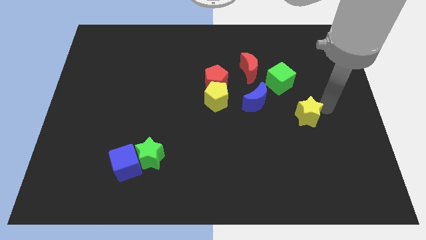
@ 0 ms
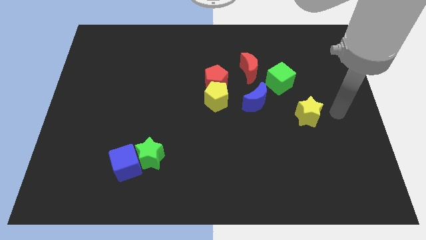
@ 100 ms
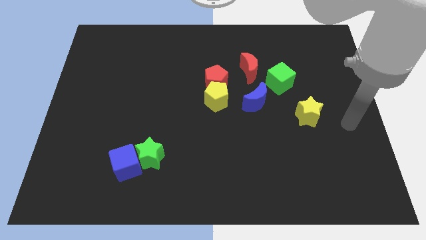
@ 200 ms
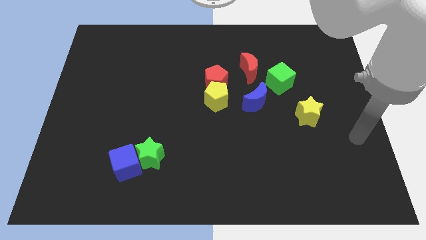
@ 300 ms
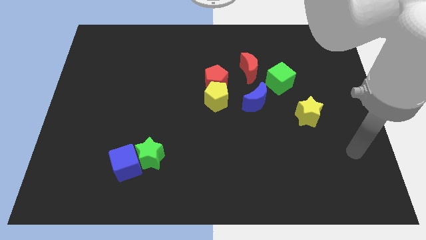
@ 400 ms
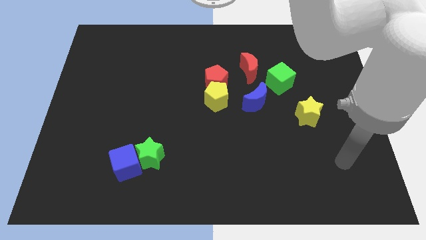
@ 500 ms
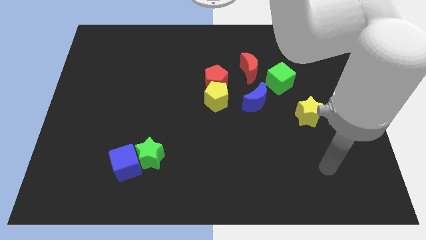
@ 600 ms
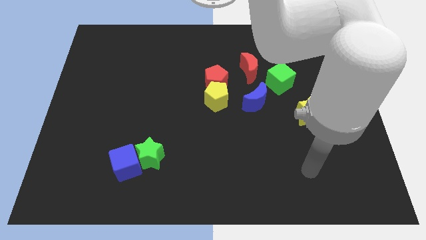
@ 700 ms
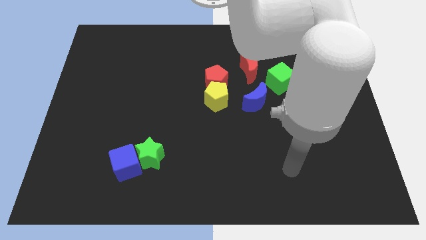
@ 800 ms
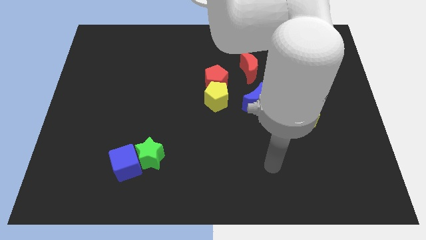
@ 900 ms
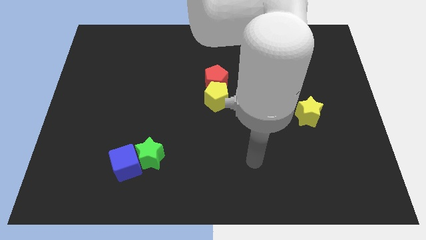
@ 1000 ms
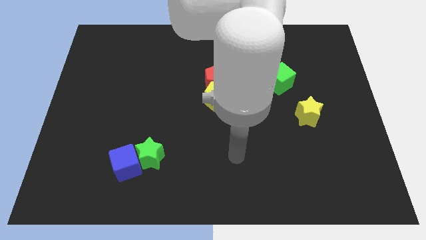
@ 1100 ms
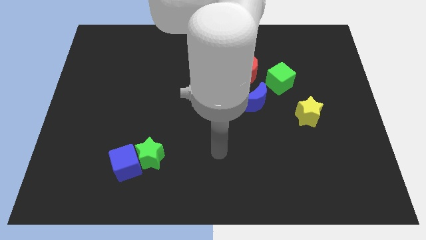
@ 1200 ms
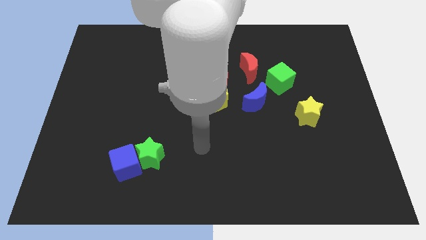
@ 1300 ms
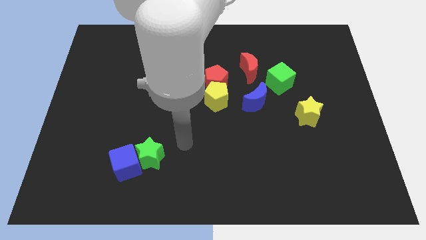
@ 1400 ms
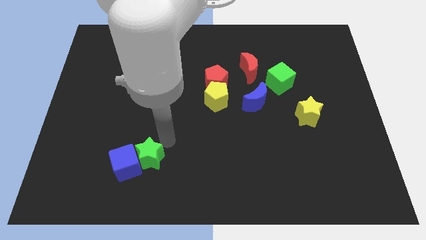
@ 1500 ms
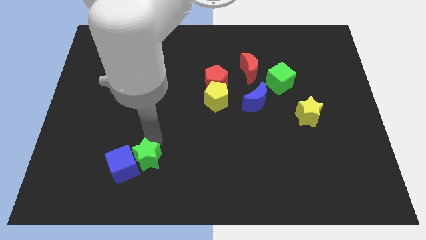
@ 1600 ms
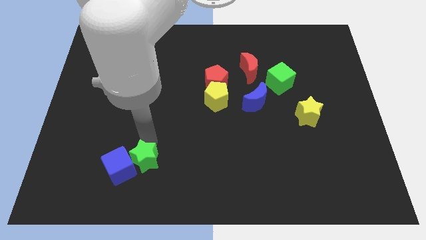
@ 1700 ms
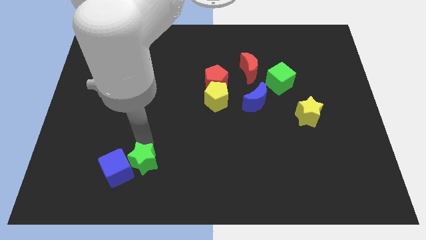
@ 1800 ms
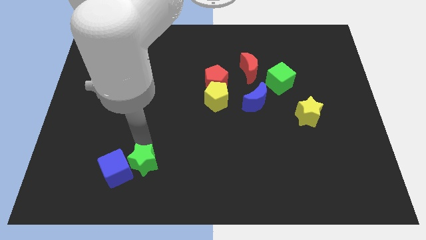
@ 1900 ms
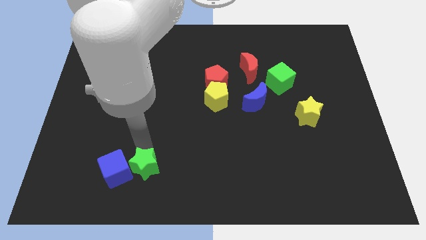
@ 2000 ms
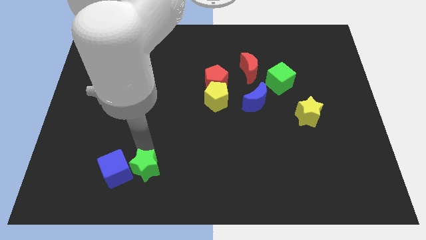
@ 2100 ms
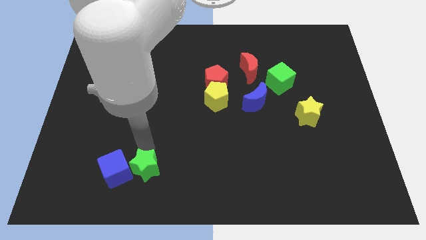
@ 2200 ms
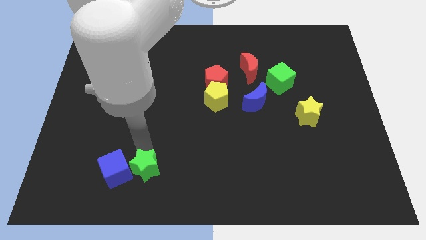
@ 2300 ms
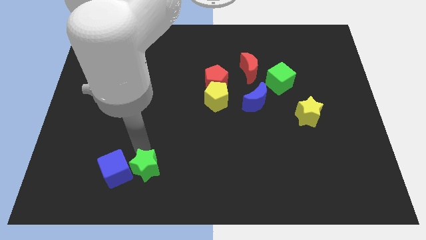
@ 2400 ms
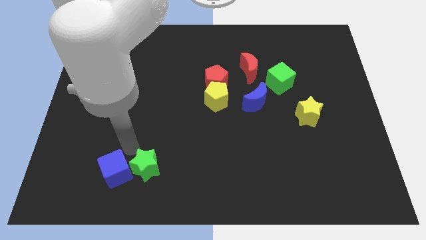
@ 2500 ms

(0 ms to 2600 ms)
move the green star into the blue cube

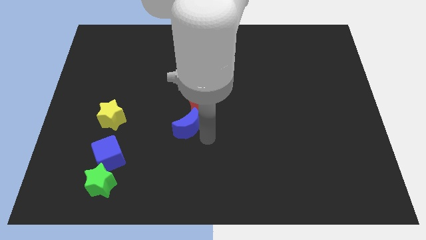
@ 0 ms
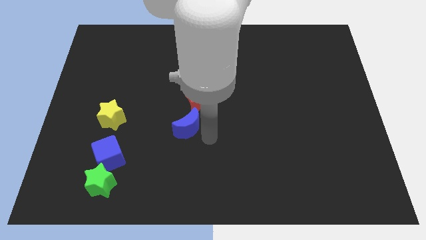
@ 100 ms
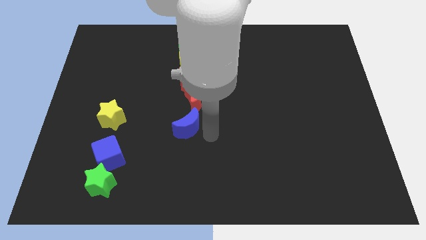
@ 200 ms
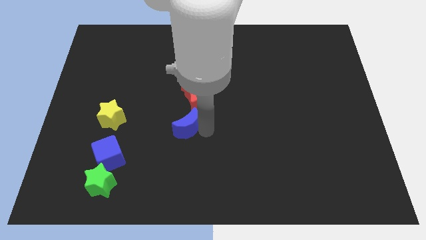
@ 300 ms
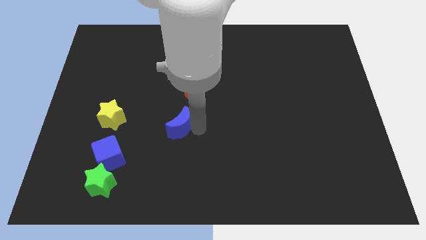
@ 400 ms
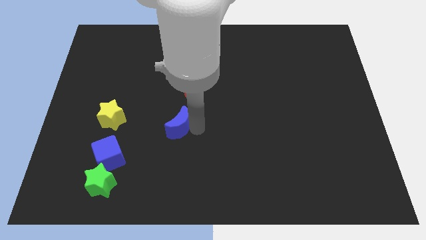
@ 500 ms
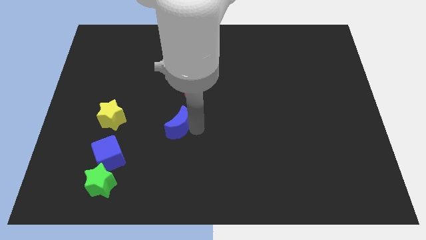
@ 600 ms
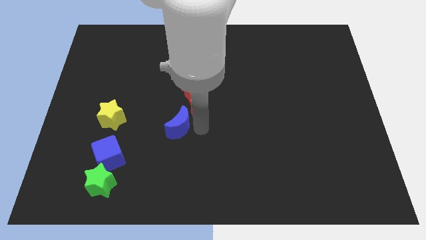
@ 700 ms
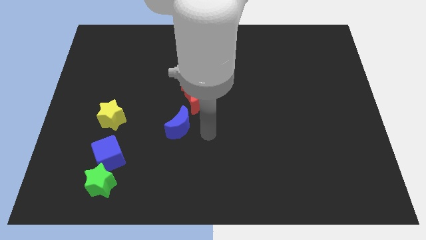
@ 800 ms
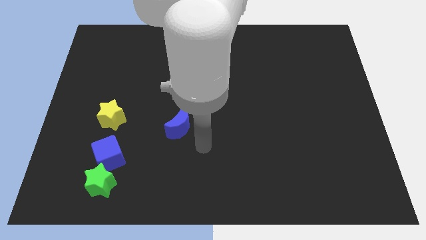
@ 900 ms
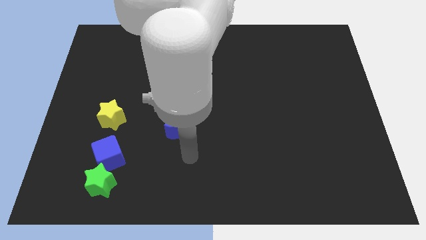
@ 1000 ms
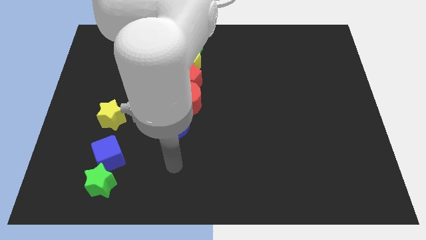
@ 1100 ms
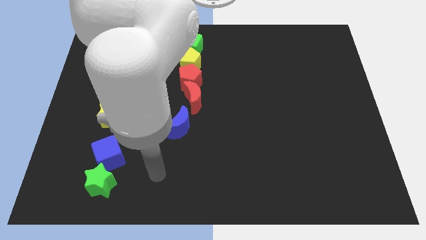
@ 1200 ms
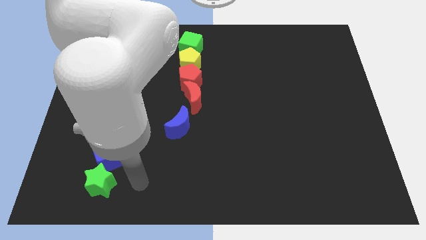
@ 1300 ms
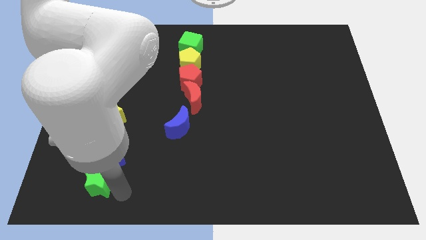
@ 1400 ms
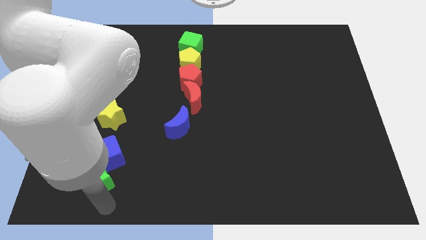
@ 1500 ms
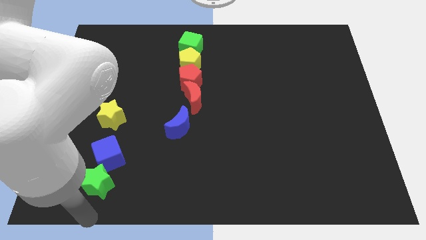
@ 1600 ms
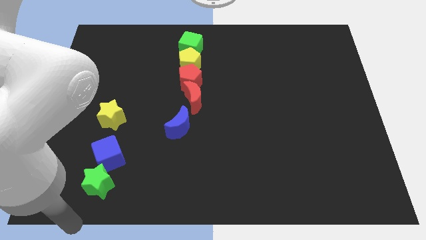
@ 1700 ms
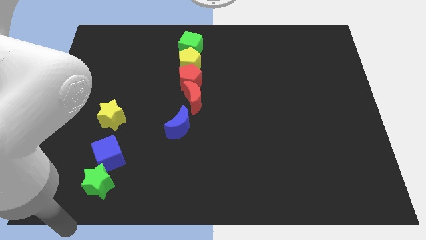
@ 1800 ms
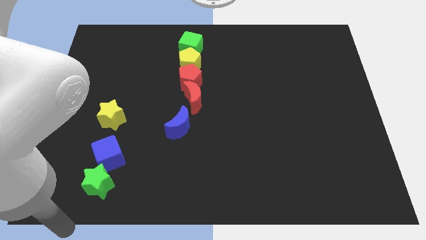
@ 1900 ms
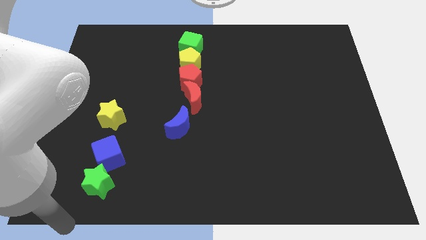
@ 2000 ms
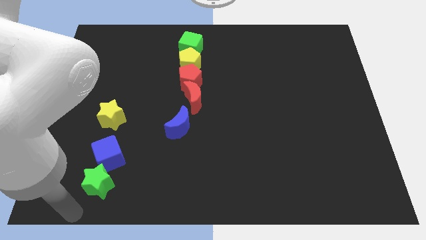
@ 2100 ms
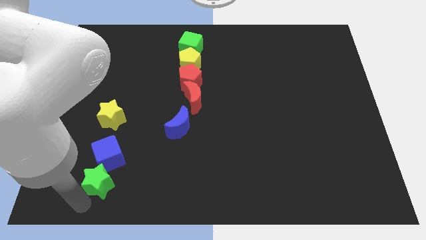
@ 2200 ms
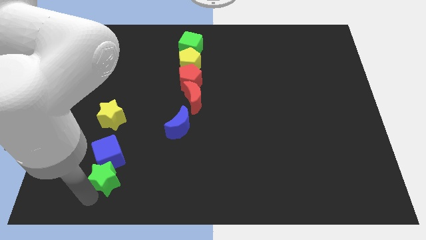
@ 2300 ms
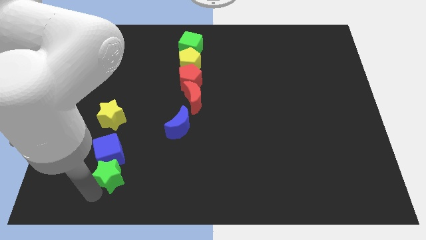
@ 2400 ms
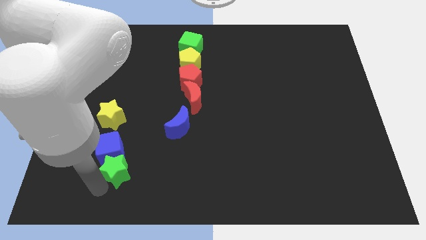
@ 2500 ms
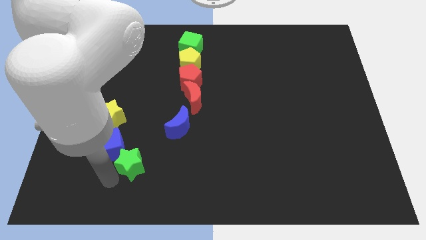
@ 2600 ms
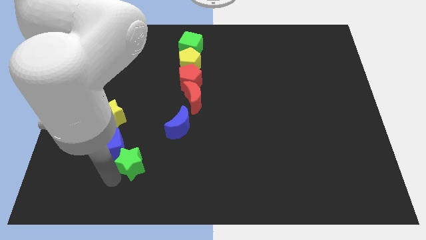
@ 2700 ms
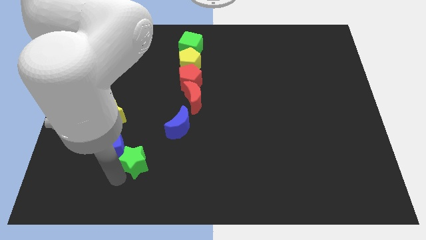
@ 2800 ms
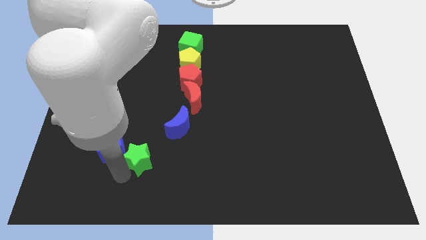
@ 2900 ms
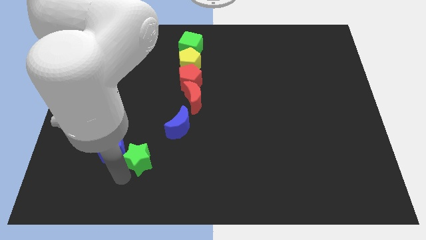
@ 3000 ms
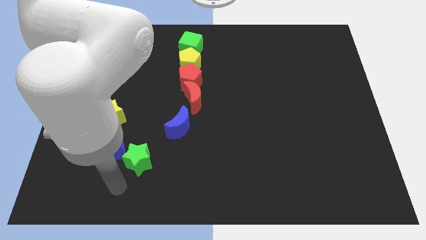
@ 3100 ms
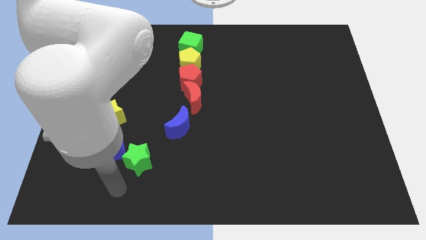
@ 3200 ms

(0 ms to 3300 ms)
move the arm away from the blue moon

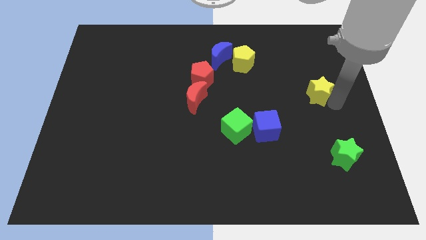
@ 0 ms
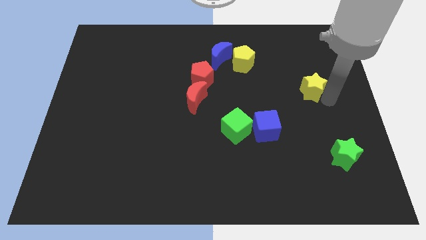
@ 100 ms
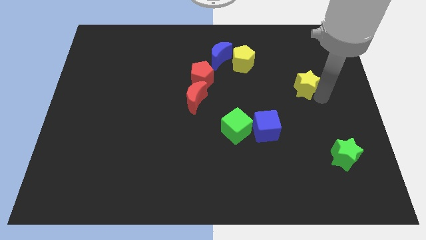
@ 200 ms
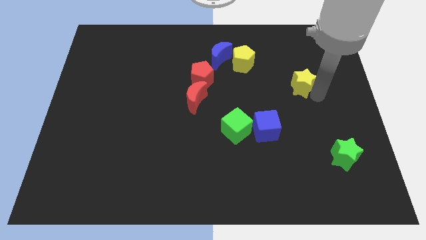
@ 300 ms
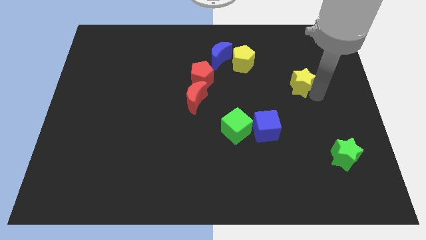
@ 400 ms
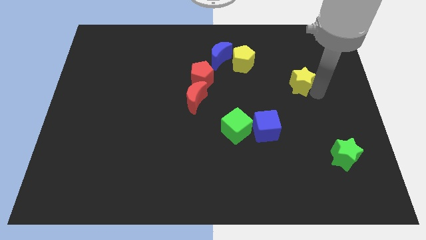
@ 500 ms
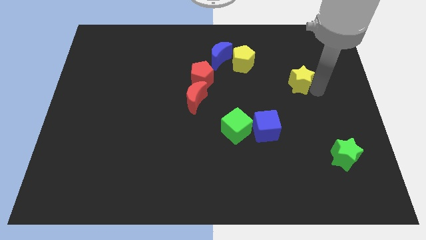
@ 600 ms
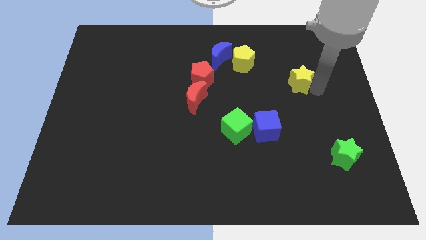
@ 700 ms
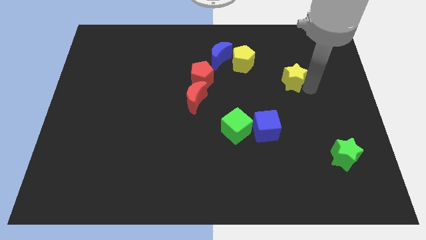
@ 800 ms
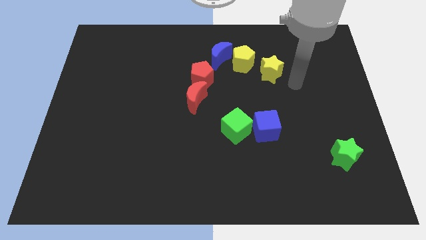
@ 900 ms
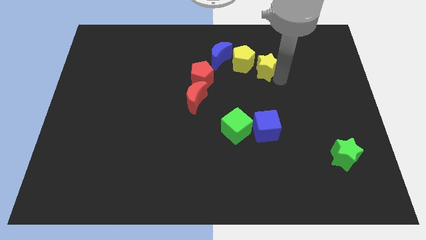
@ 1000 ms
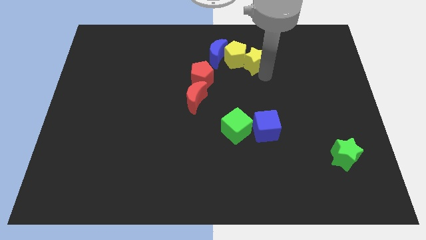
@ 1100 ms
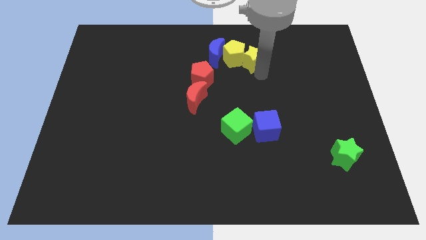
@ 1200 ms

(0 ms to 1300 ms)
push the yellow star into the bottom right of the yellow pentagon

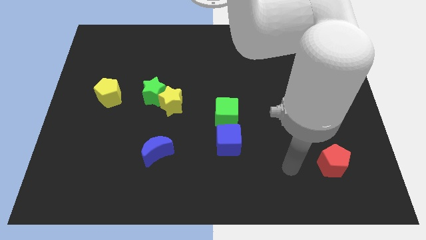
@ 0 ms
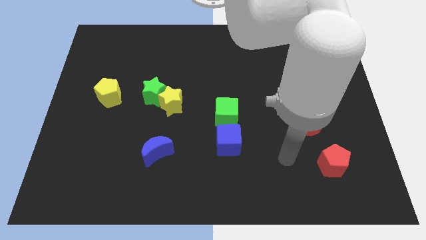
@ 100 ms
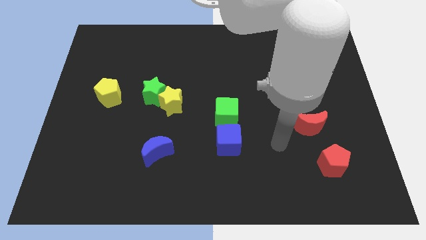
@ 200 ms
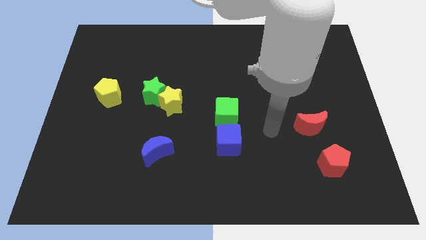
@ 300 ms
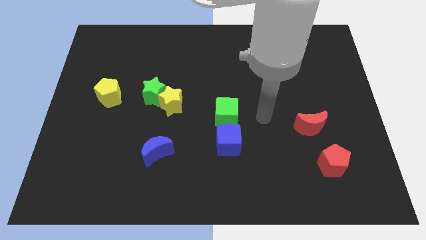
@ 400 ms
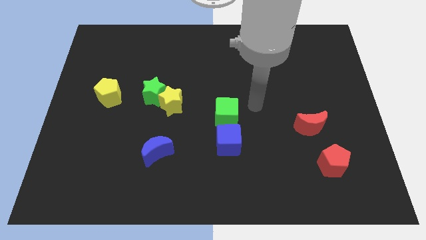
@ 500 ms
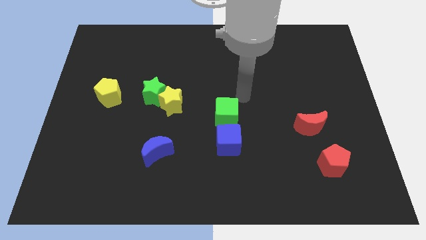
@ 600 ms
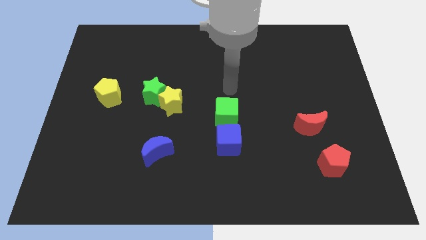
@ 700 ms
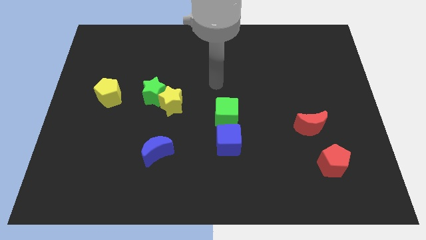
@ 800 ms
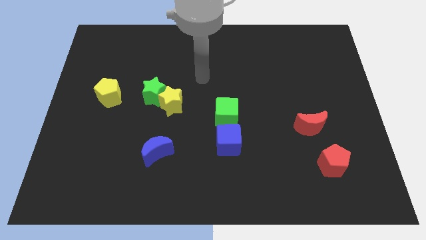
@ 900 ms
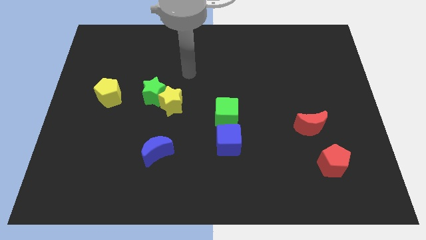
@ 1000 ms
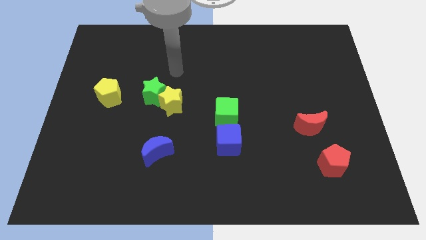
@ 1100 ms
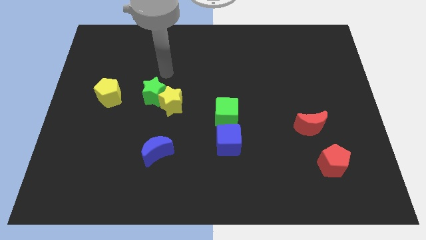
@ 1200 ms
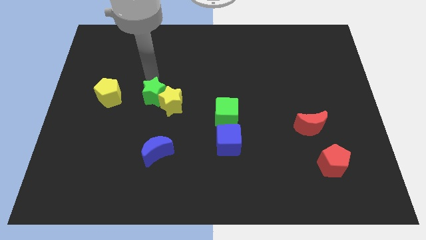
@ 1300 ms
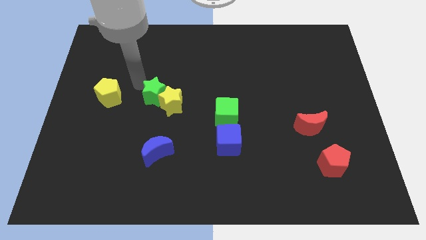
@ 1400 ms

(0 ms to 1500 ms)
move your arm to the top of the green star

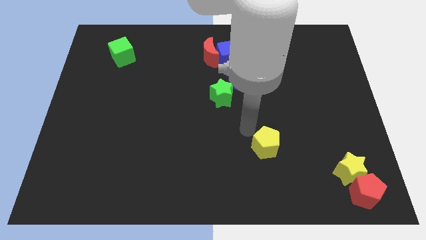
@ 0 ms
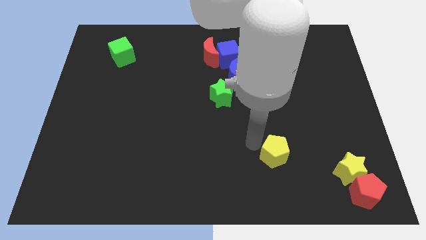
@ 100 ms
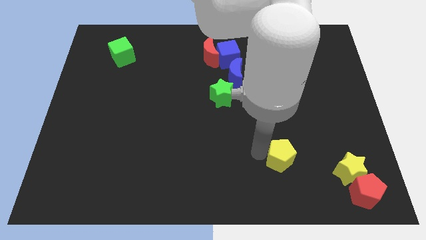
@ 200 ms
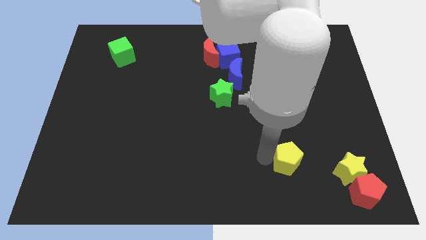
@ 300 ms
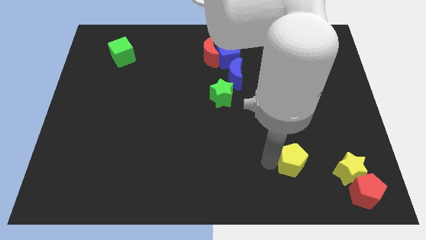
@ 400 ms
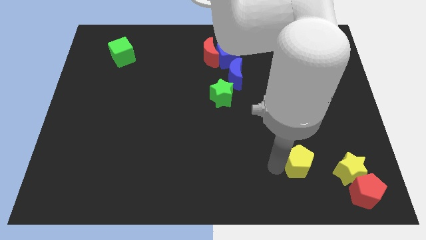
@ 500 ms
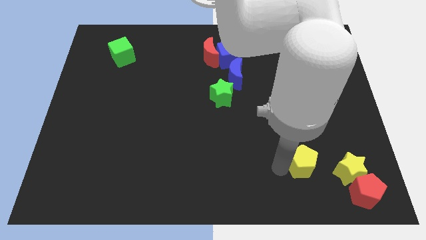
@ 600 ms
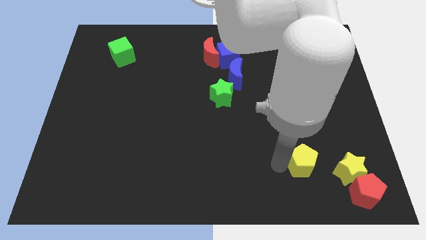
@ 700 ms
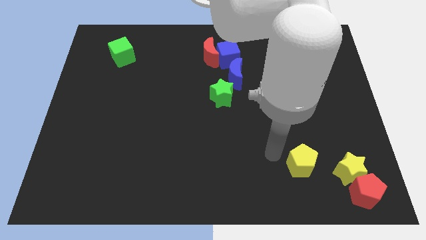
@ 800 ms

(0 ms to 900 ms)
slide the yellow pentagon to the left side of the yellow star
